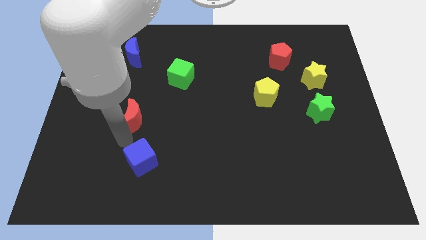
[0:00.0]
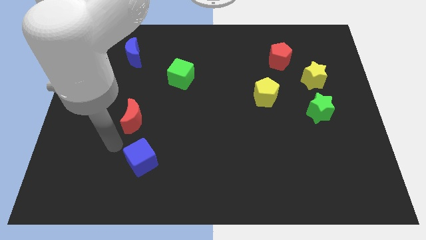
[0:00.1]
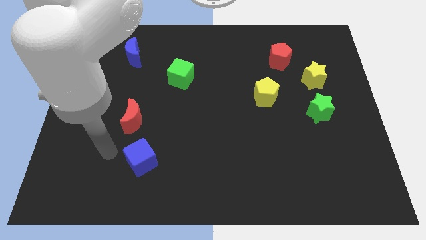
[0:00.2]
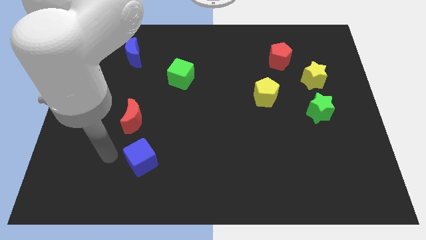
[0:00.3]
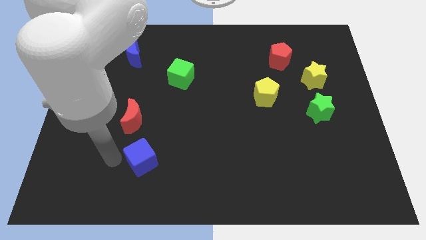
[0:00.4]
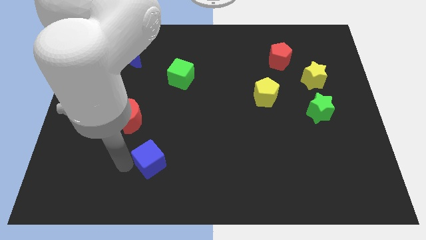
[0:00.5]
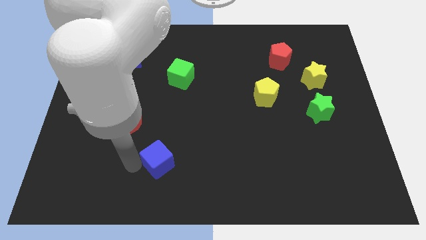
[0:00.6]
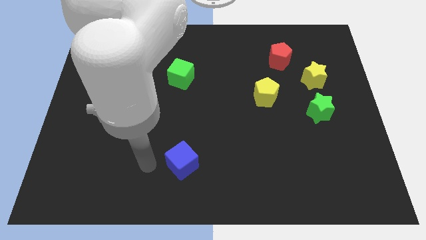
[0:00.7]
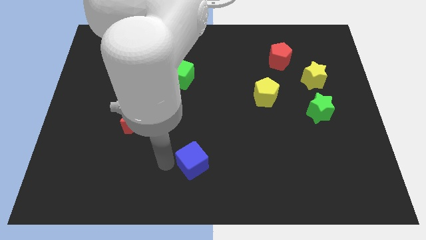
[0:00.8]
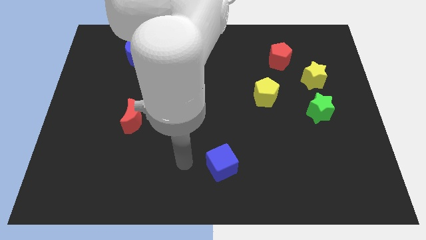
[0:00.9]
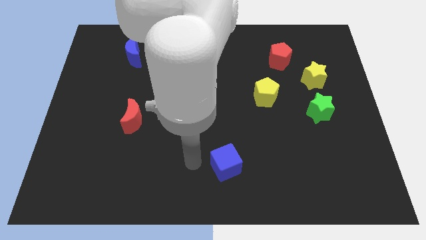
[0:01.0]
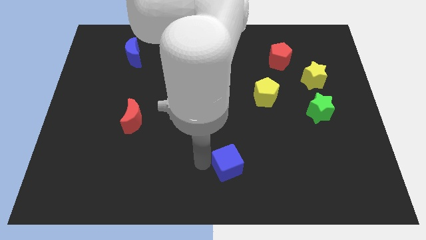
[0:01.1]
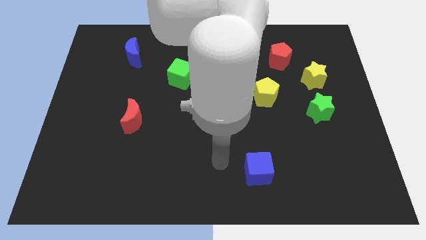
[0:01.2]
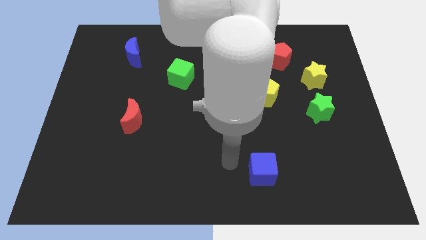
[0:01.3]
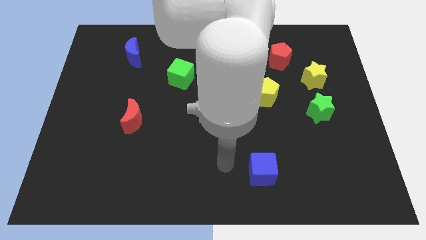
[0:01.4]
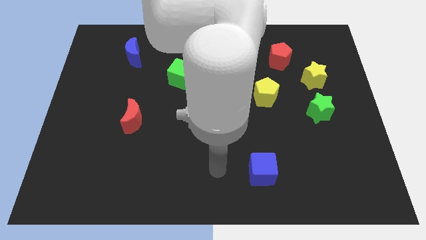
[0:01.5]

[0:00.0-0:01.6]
push the blue cube to the right of the board

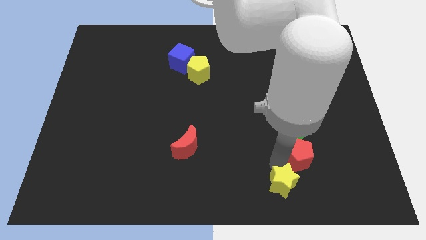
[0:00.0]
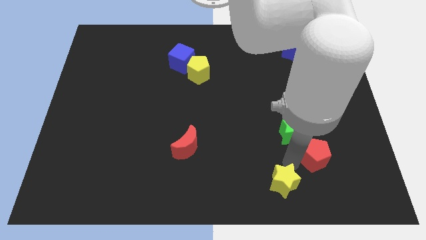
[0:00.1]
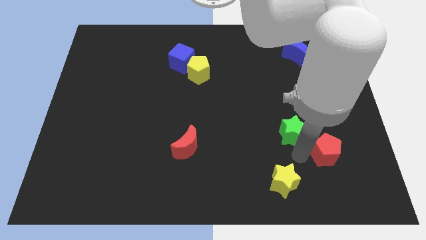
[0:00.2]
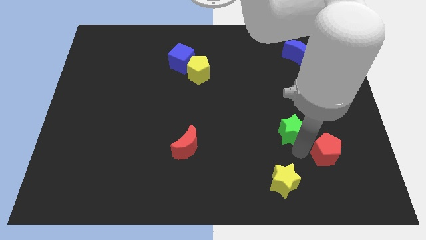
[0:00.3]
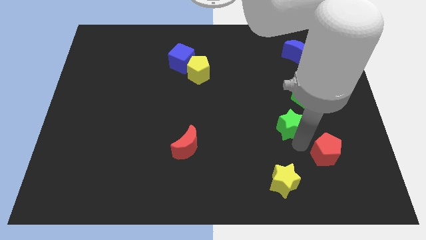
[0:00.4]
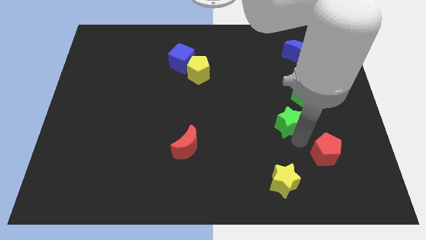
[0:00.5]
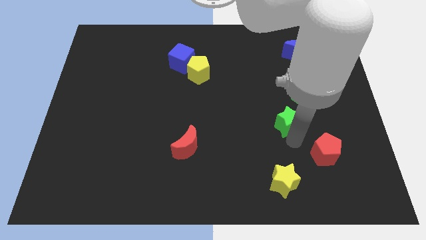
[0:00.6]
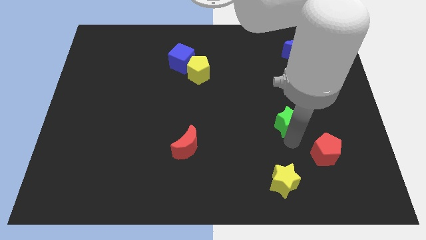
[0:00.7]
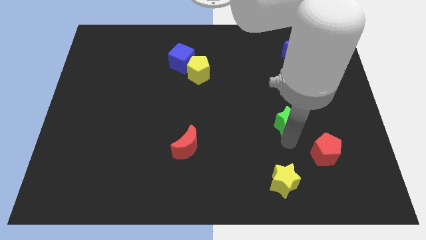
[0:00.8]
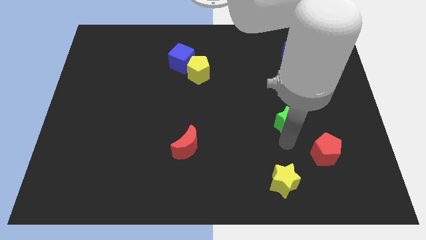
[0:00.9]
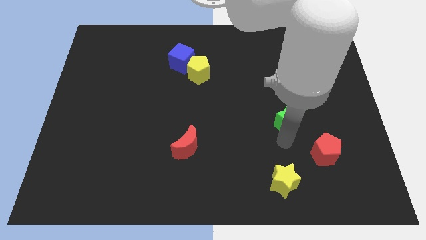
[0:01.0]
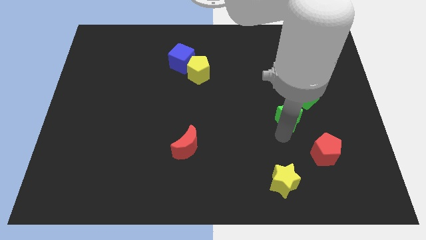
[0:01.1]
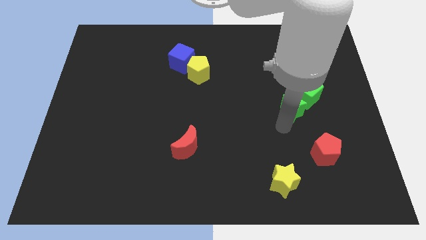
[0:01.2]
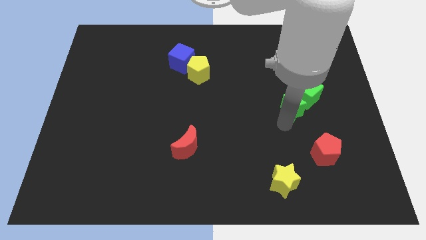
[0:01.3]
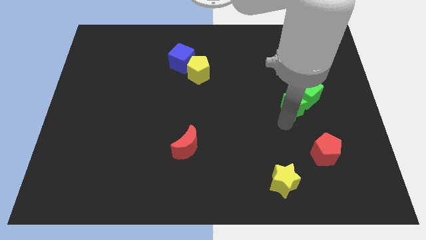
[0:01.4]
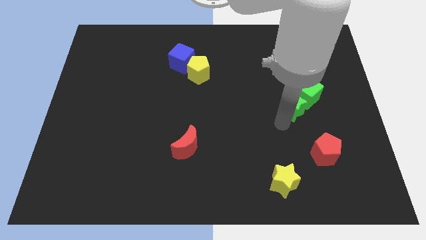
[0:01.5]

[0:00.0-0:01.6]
push the green star into the green cube

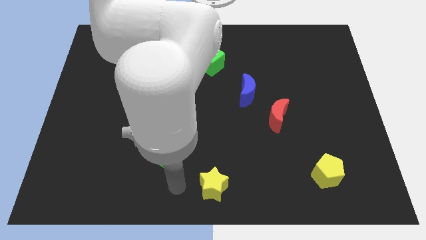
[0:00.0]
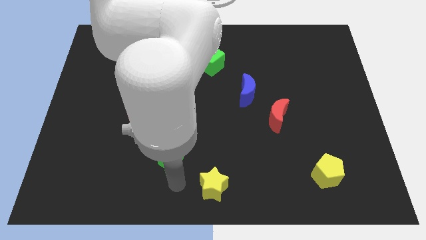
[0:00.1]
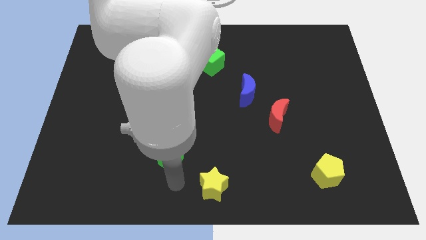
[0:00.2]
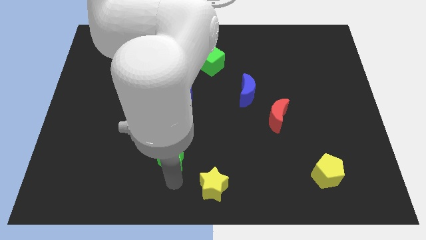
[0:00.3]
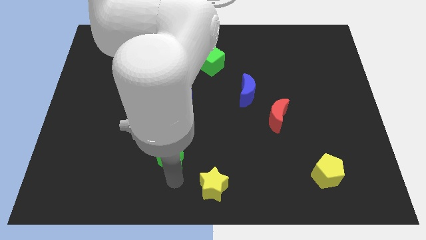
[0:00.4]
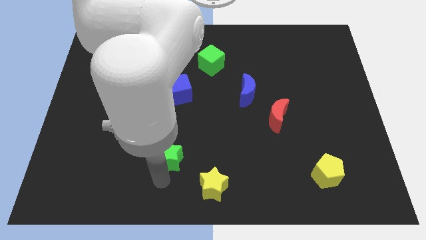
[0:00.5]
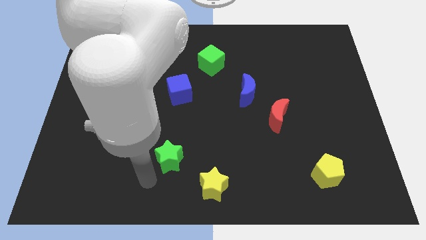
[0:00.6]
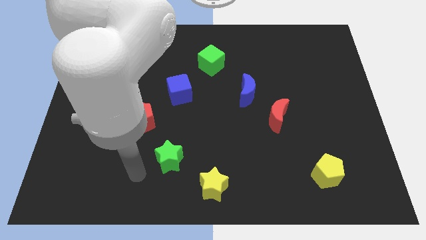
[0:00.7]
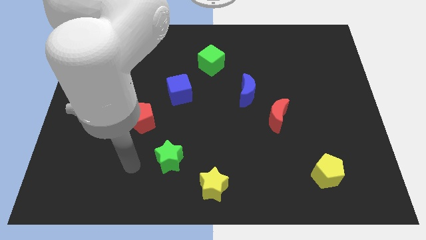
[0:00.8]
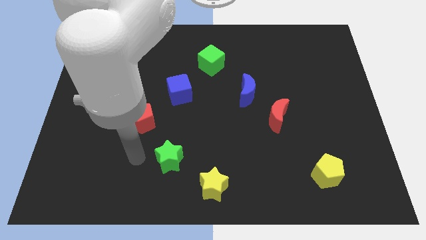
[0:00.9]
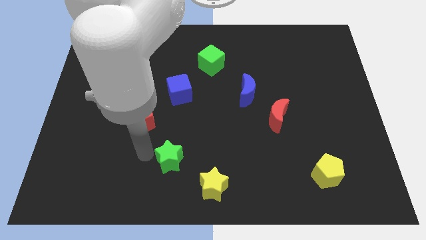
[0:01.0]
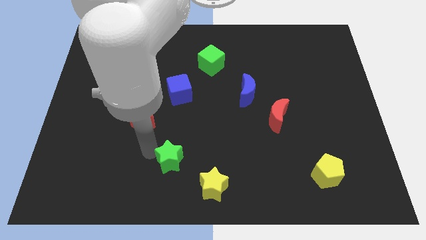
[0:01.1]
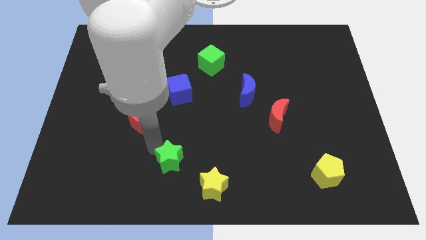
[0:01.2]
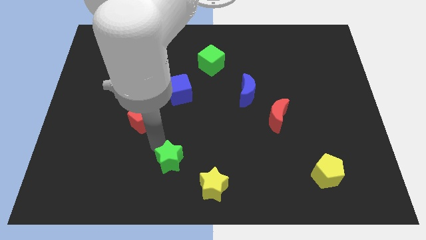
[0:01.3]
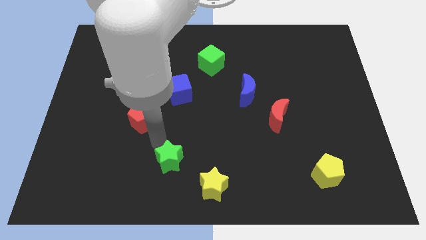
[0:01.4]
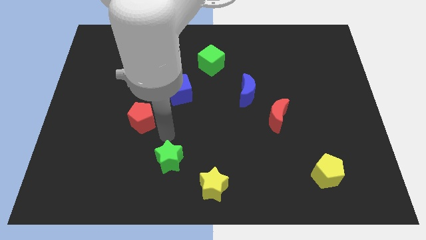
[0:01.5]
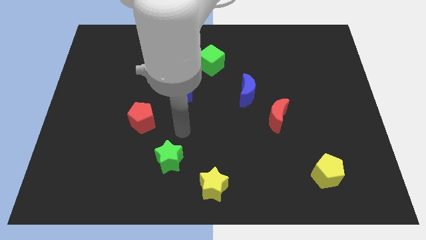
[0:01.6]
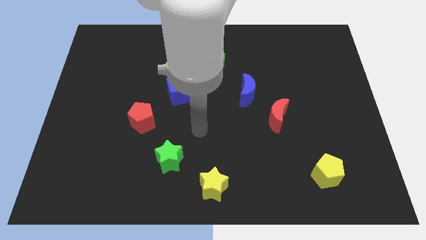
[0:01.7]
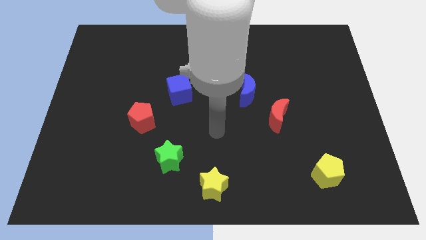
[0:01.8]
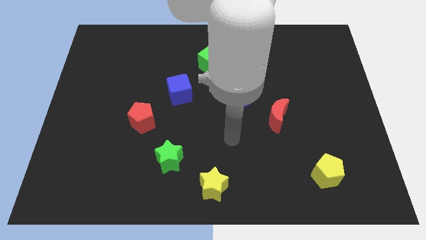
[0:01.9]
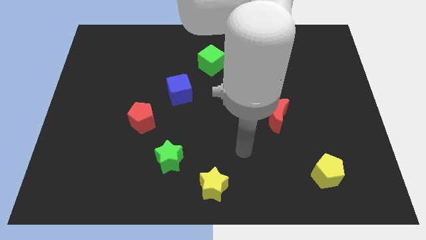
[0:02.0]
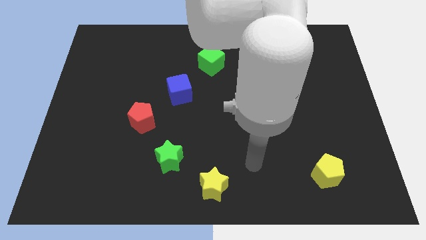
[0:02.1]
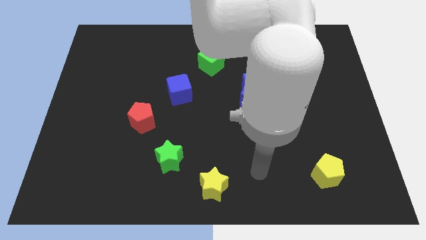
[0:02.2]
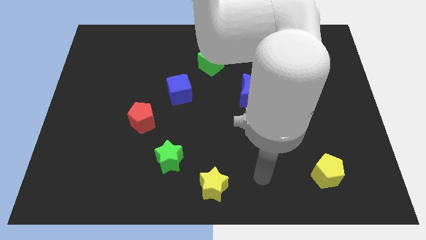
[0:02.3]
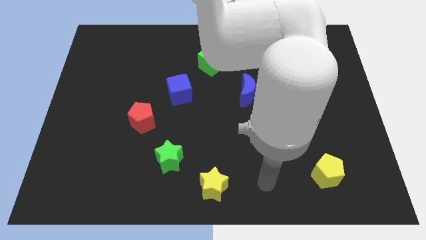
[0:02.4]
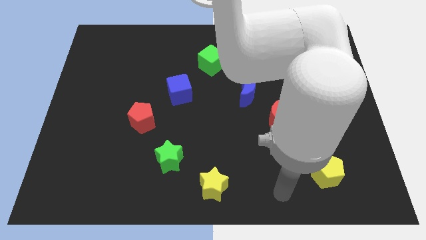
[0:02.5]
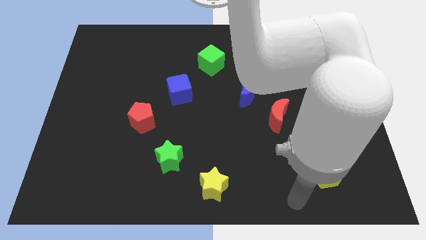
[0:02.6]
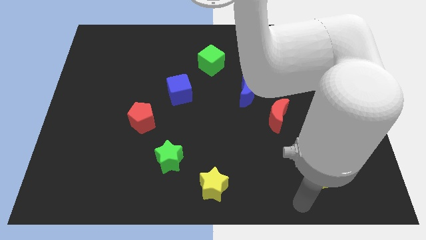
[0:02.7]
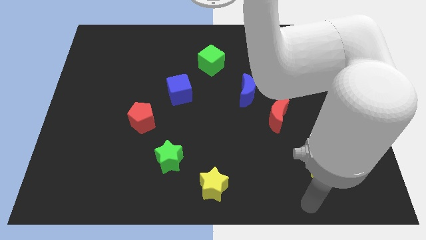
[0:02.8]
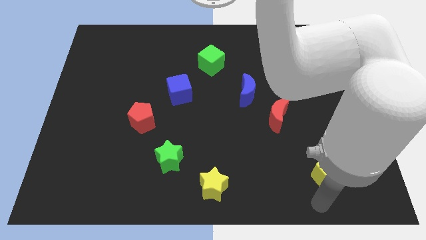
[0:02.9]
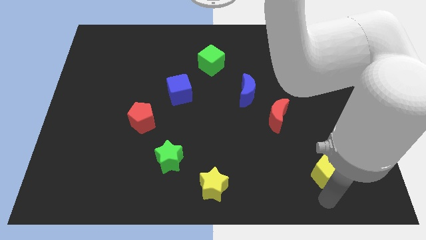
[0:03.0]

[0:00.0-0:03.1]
point the arm below the yellow pentagon

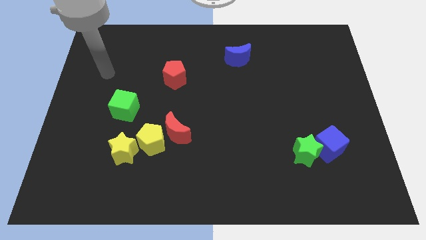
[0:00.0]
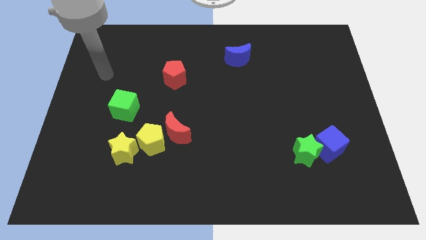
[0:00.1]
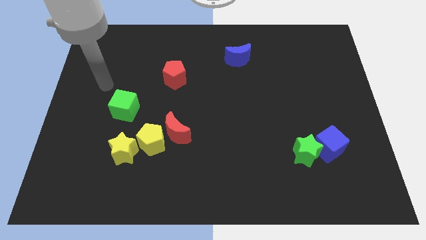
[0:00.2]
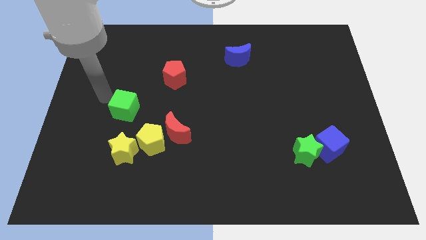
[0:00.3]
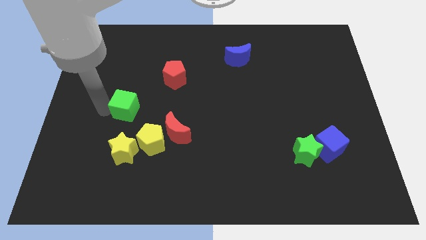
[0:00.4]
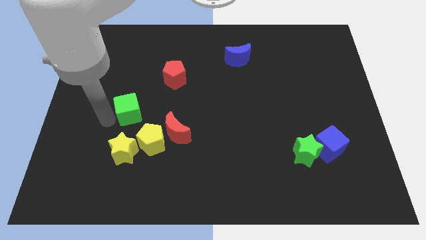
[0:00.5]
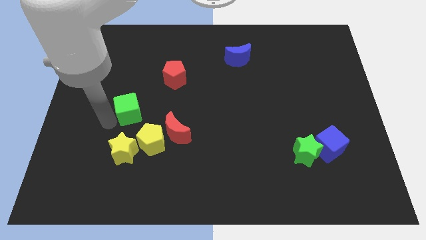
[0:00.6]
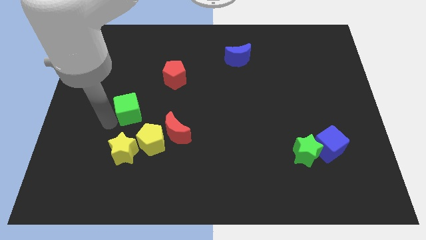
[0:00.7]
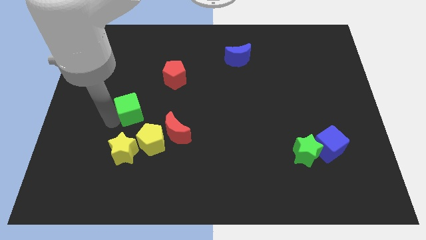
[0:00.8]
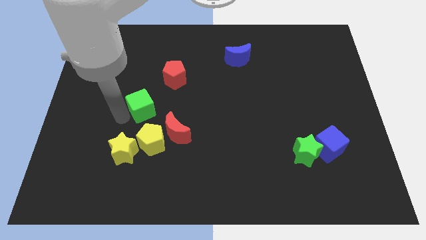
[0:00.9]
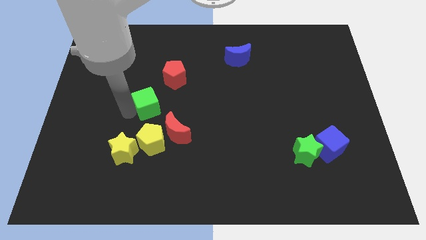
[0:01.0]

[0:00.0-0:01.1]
slide green cube above yellow pentagon

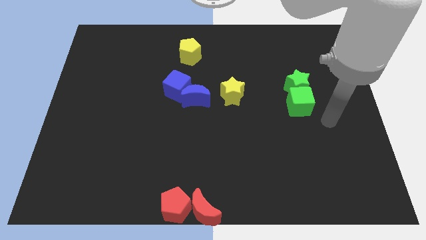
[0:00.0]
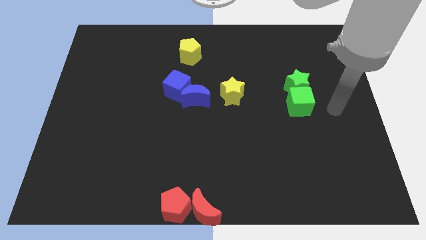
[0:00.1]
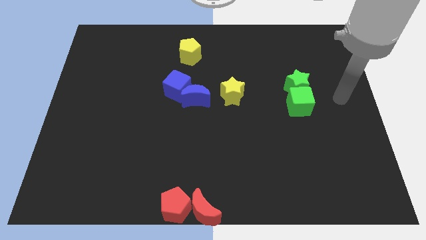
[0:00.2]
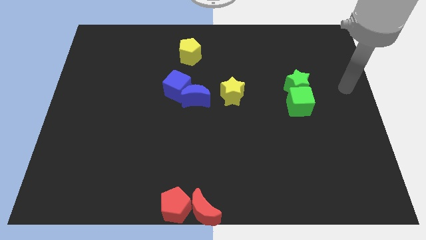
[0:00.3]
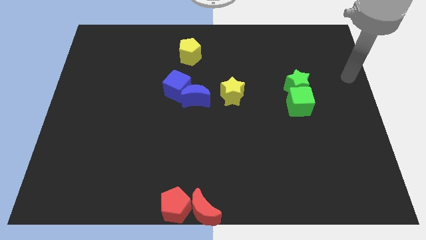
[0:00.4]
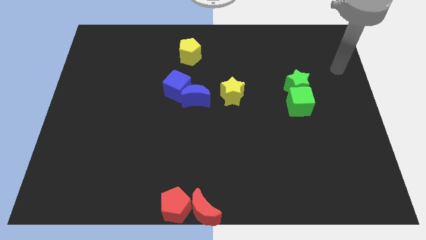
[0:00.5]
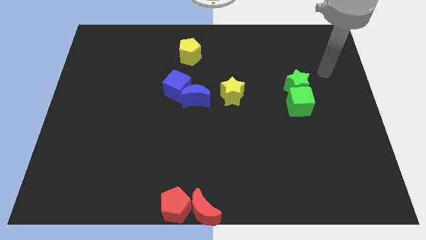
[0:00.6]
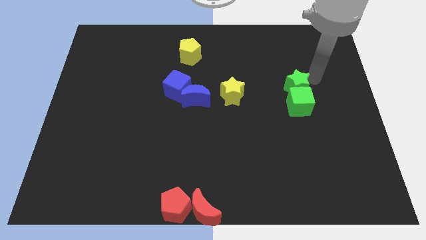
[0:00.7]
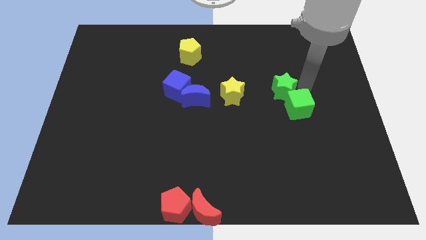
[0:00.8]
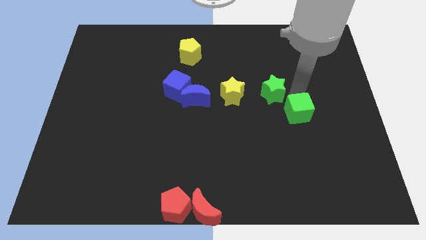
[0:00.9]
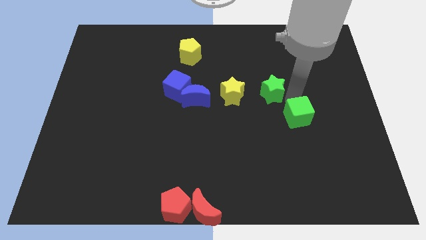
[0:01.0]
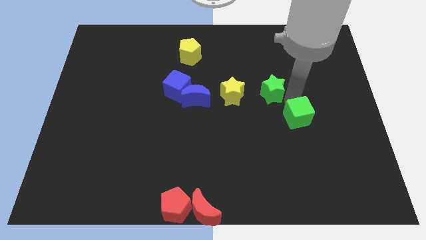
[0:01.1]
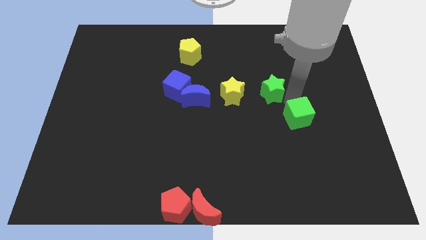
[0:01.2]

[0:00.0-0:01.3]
go and separate the green star and green cube from each other

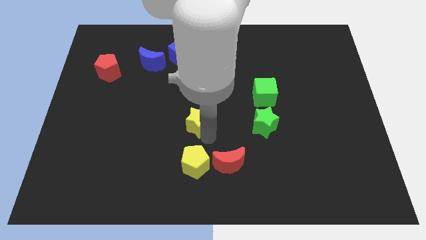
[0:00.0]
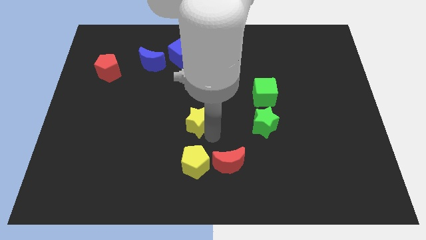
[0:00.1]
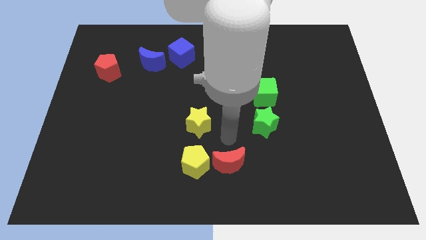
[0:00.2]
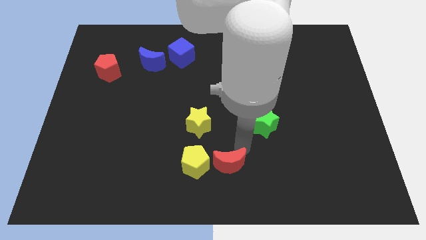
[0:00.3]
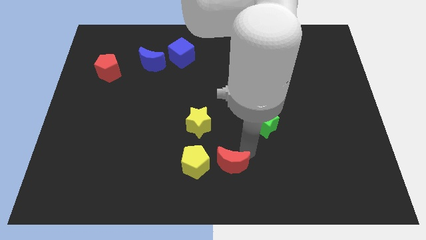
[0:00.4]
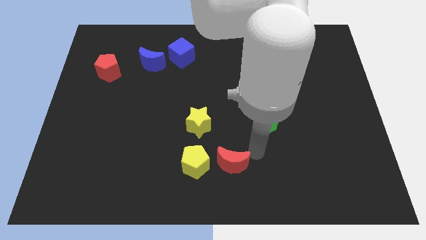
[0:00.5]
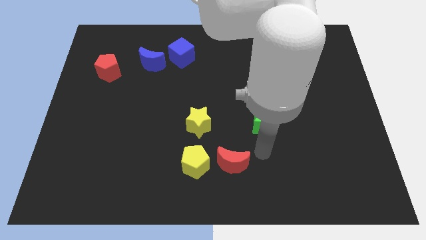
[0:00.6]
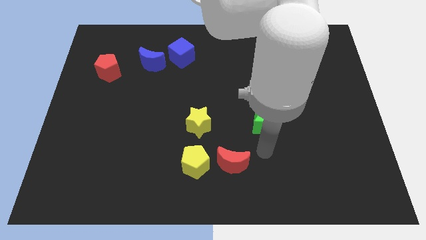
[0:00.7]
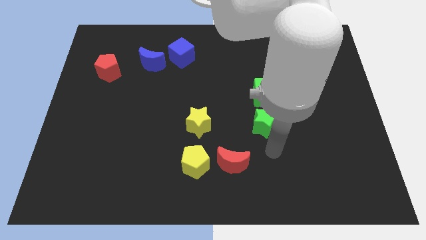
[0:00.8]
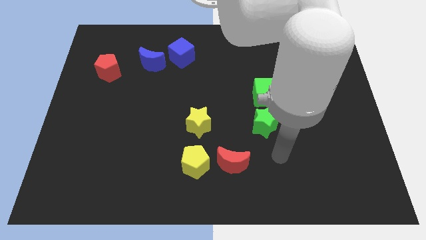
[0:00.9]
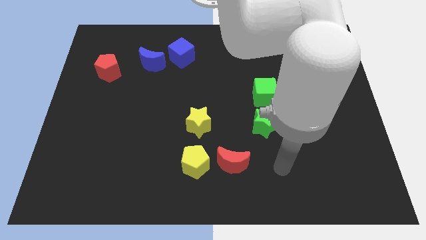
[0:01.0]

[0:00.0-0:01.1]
tap on red moon with your arm
